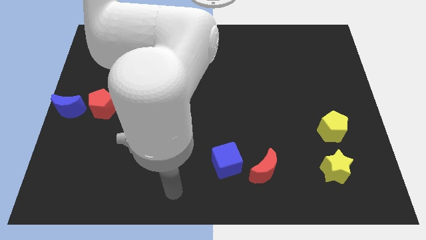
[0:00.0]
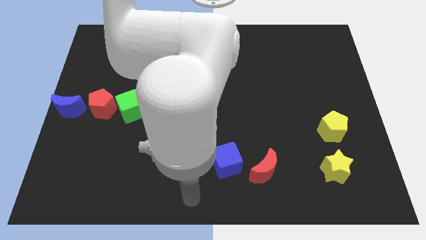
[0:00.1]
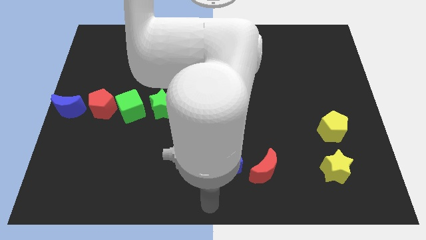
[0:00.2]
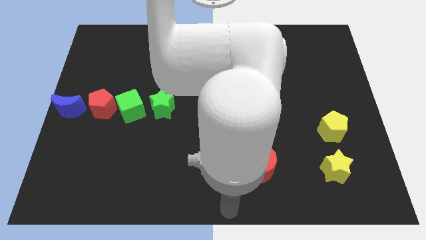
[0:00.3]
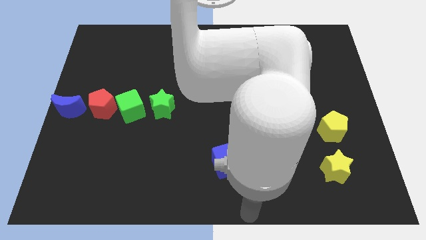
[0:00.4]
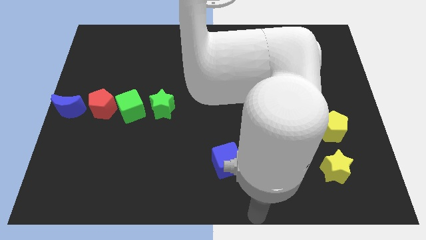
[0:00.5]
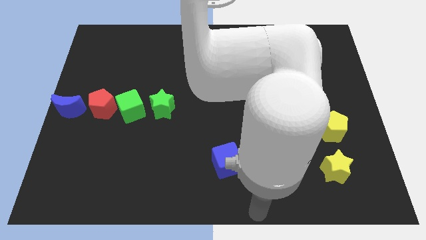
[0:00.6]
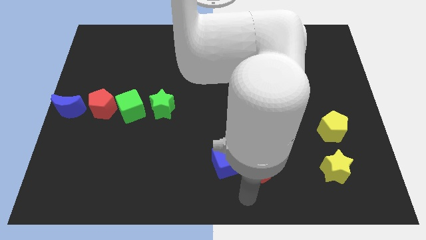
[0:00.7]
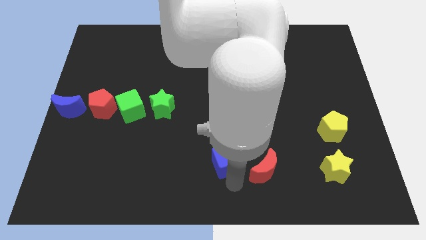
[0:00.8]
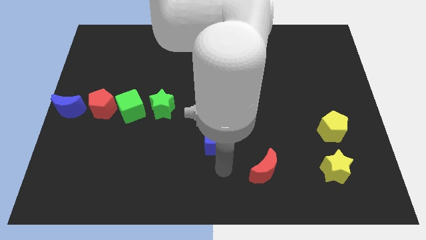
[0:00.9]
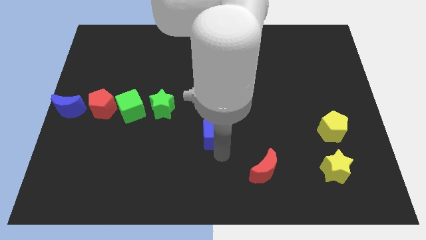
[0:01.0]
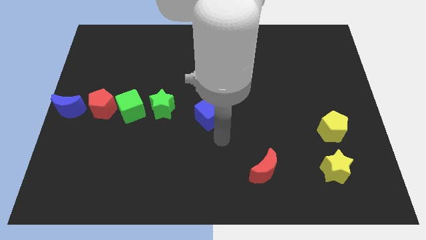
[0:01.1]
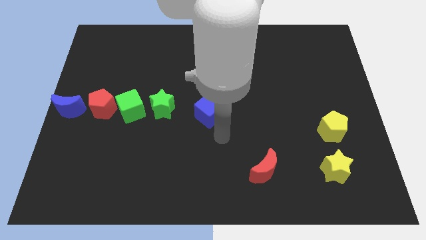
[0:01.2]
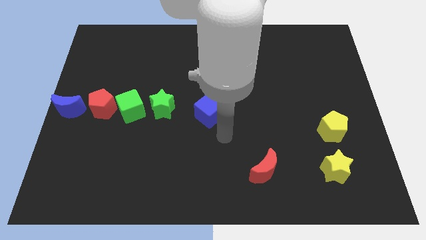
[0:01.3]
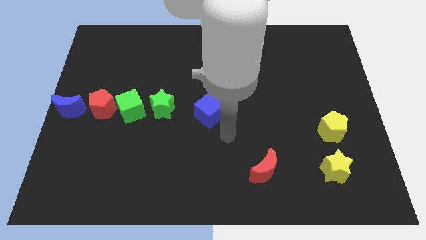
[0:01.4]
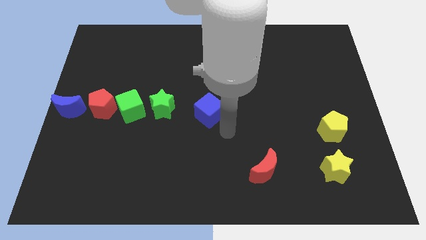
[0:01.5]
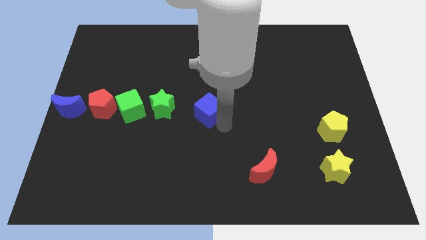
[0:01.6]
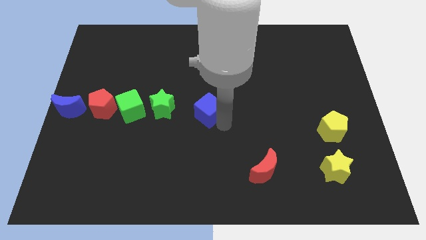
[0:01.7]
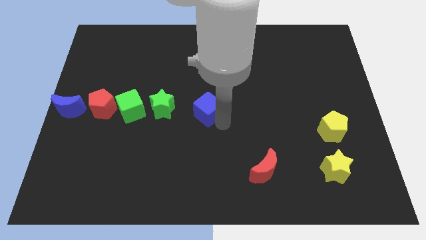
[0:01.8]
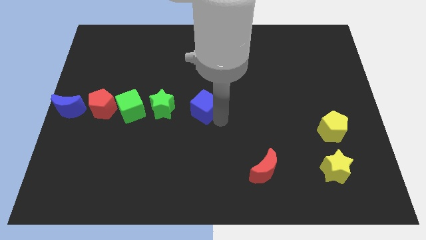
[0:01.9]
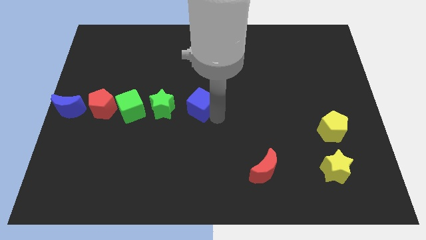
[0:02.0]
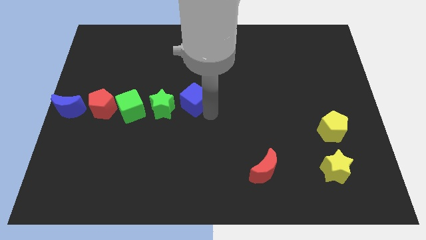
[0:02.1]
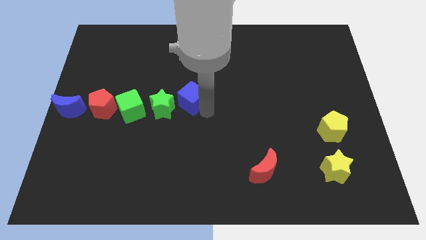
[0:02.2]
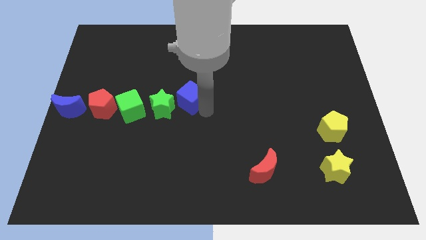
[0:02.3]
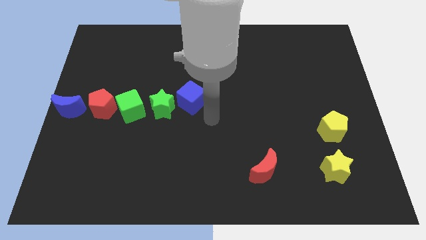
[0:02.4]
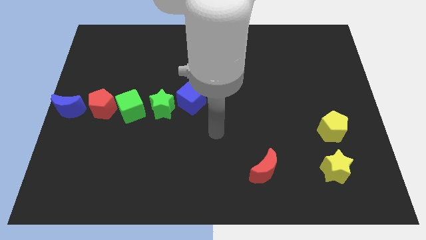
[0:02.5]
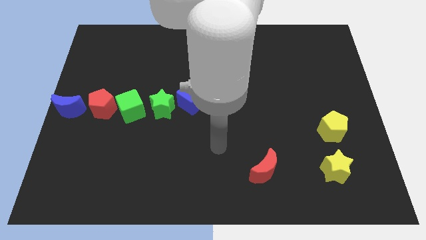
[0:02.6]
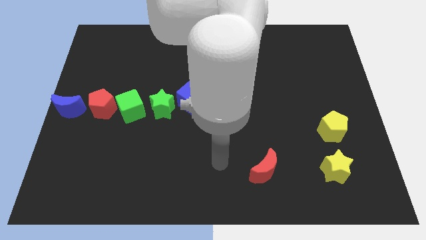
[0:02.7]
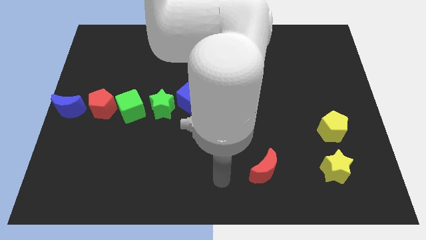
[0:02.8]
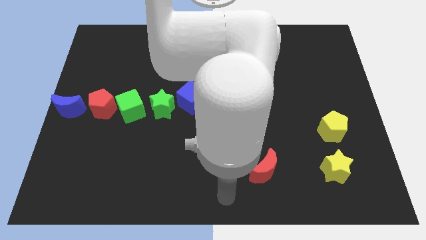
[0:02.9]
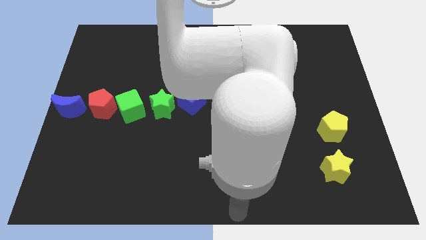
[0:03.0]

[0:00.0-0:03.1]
adjust the blue cube at the right of the green star

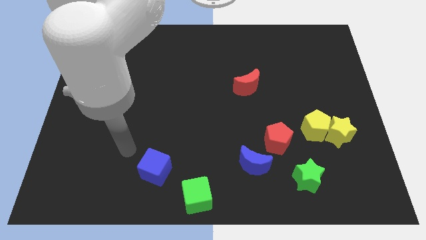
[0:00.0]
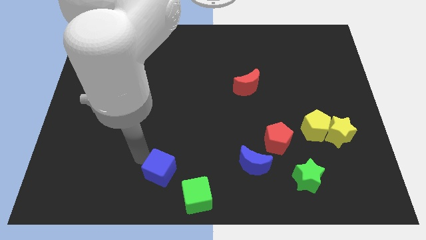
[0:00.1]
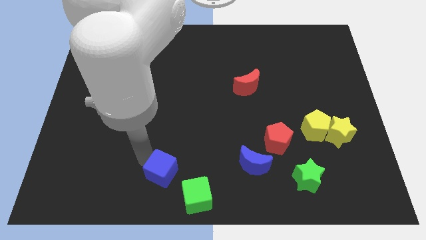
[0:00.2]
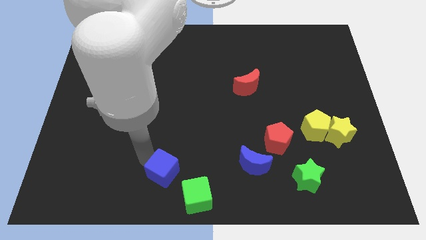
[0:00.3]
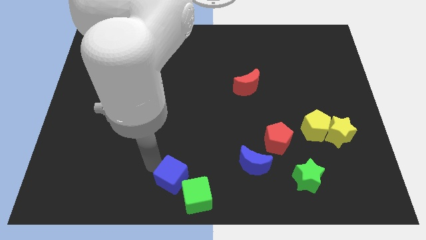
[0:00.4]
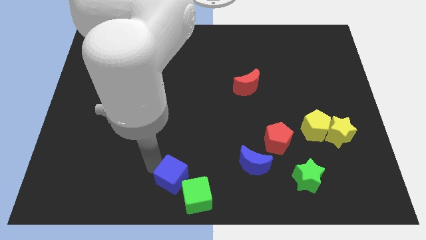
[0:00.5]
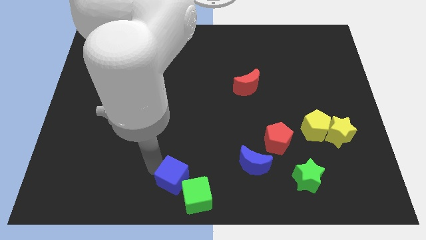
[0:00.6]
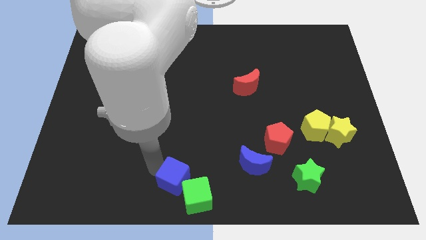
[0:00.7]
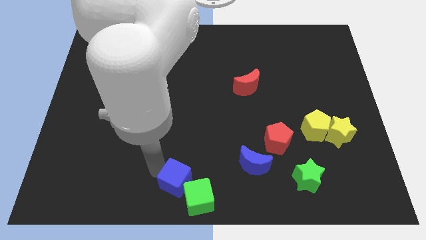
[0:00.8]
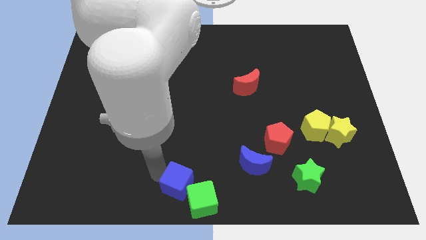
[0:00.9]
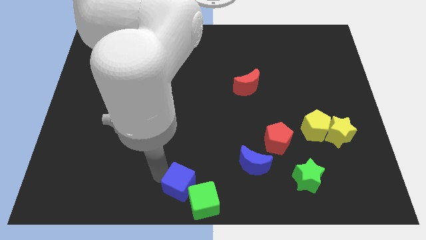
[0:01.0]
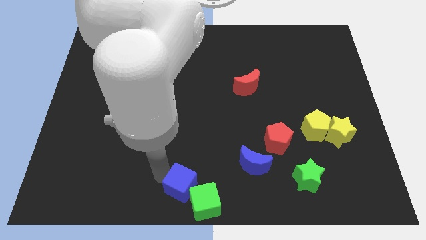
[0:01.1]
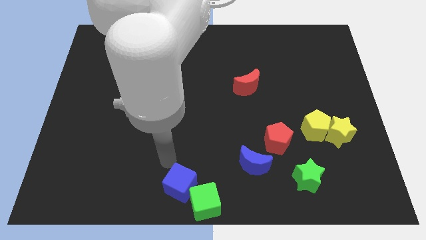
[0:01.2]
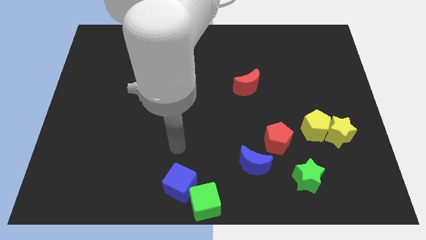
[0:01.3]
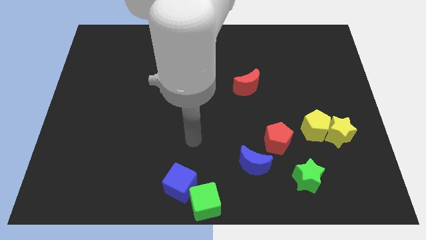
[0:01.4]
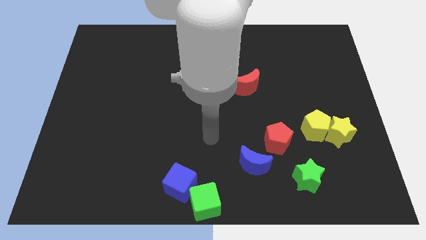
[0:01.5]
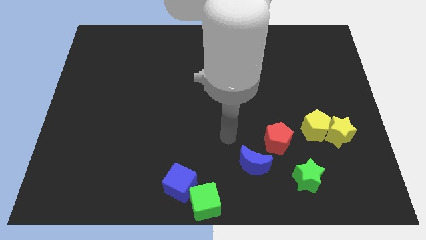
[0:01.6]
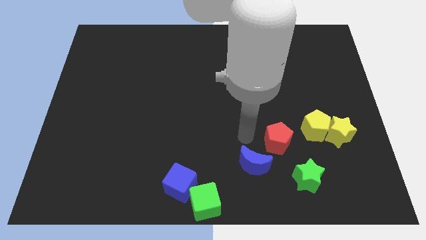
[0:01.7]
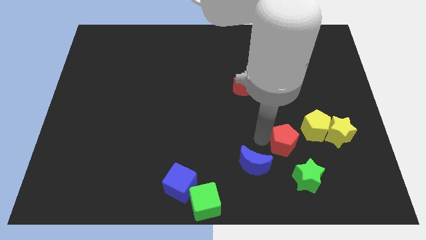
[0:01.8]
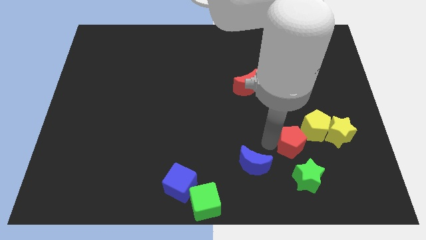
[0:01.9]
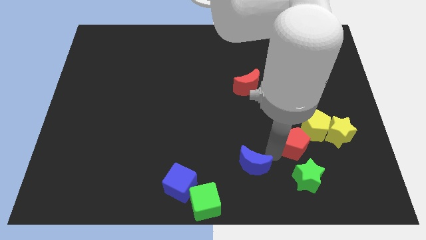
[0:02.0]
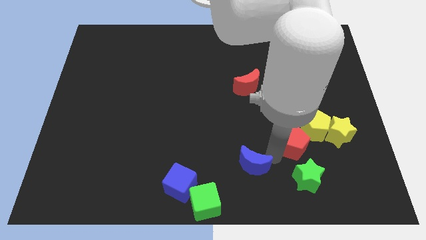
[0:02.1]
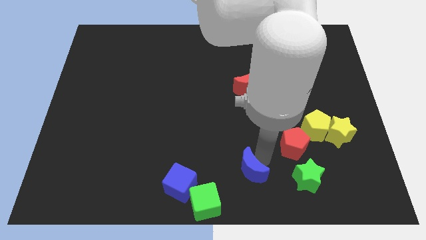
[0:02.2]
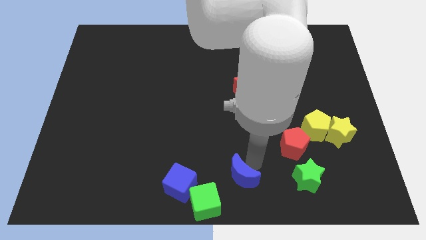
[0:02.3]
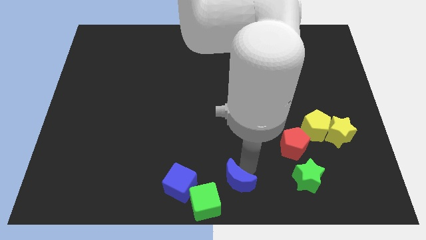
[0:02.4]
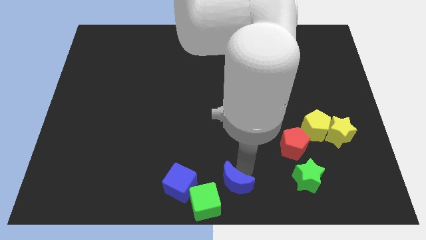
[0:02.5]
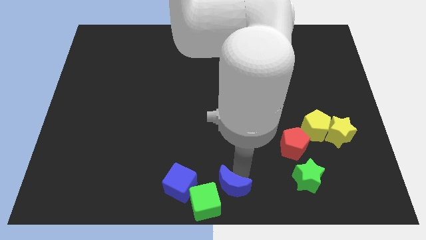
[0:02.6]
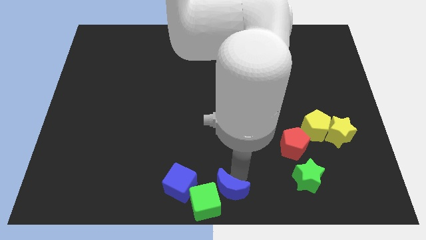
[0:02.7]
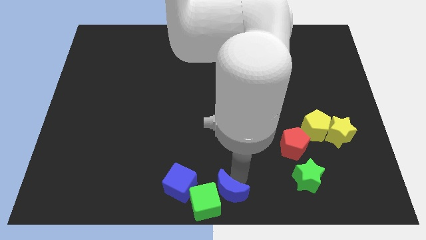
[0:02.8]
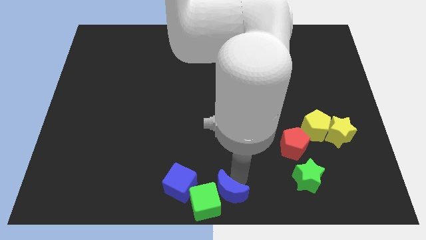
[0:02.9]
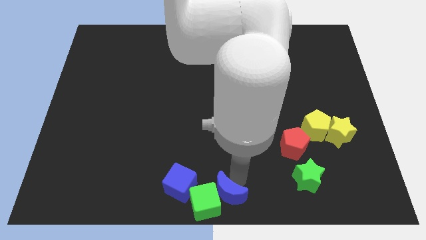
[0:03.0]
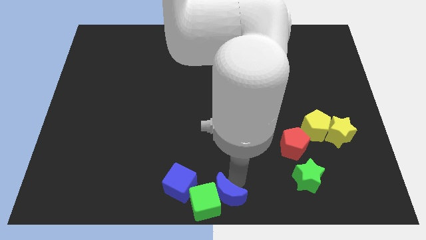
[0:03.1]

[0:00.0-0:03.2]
place blue moon to the right of green cube

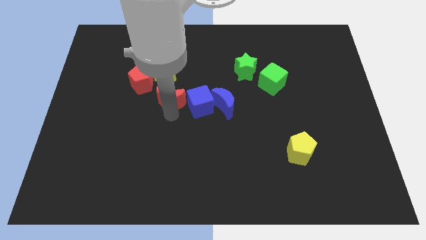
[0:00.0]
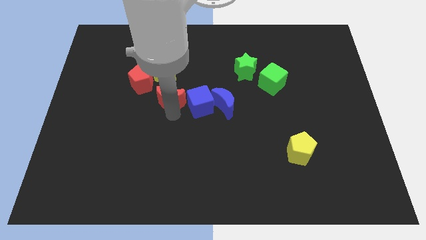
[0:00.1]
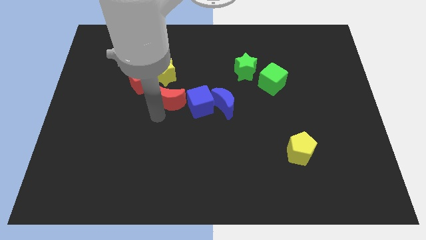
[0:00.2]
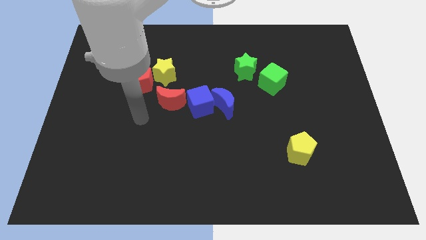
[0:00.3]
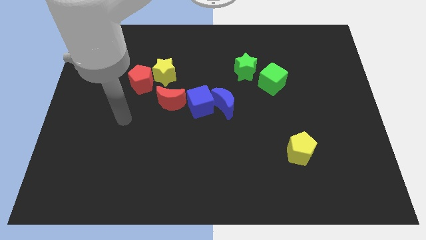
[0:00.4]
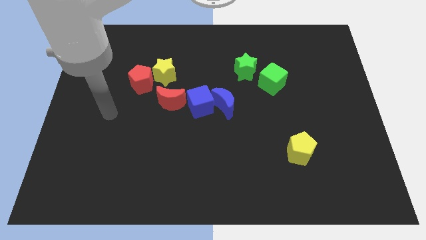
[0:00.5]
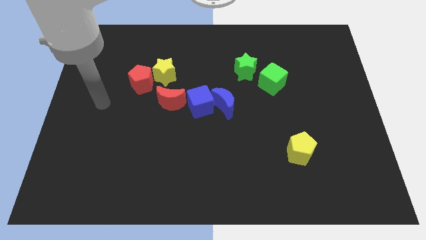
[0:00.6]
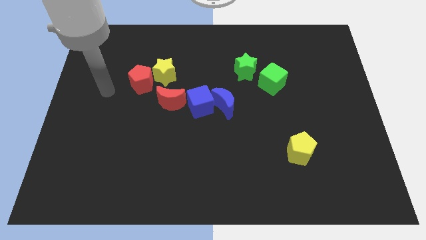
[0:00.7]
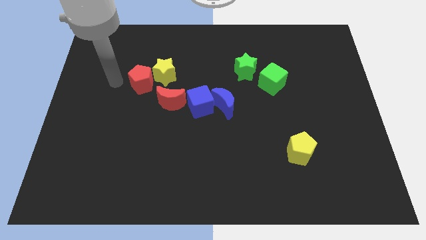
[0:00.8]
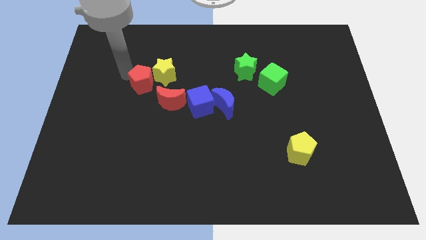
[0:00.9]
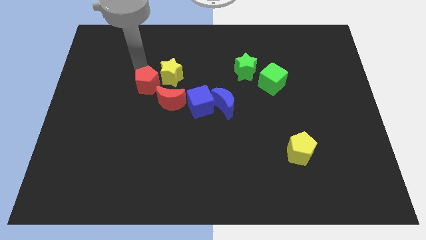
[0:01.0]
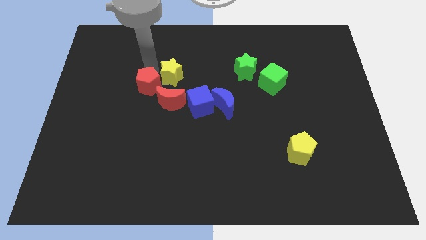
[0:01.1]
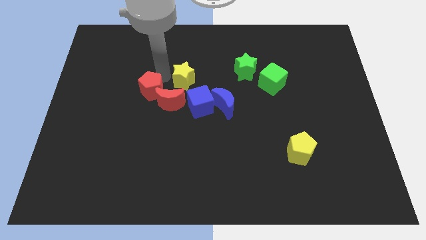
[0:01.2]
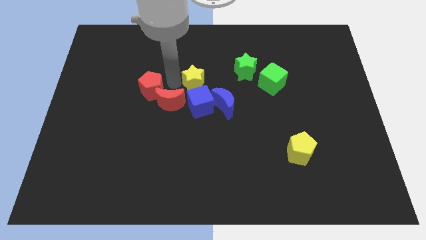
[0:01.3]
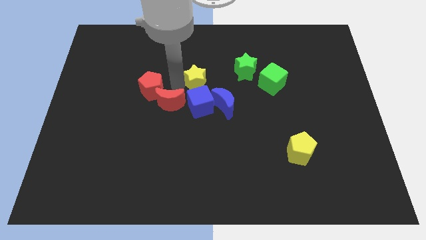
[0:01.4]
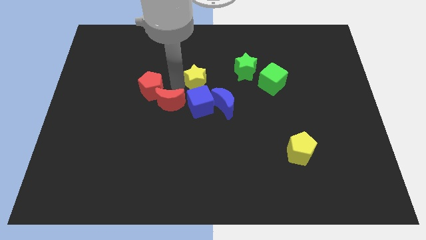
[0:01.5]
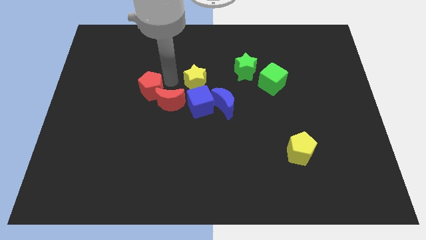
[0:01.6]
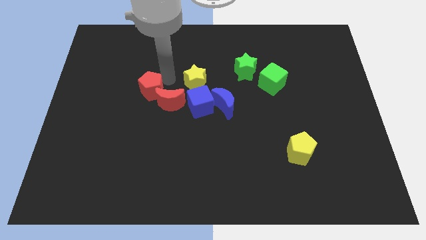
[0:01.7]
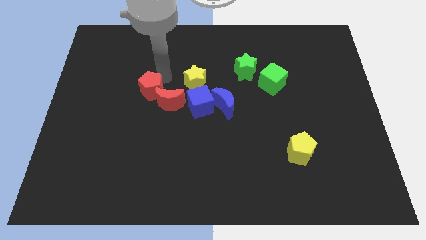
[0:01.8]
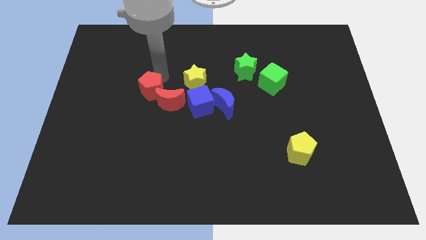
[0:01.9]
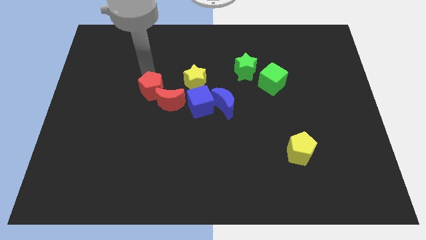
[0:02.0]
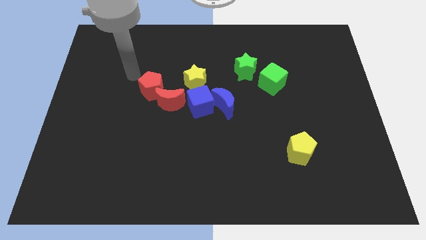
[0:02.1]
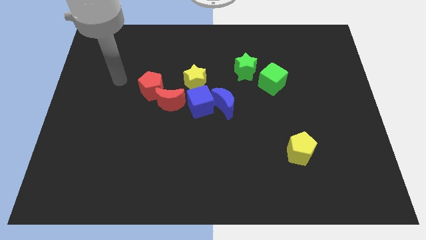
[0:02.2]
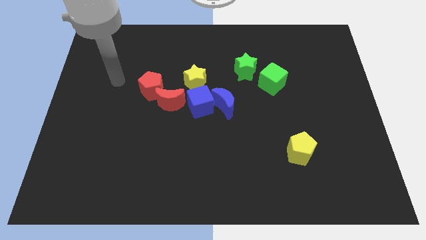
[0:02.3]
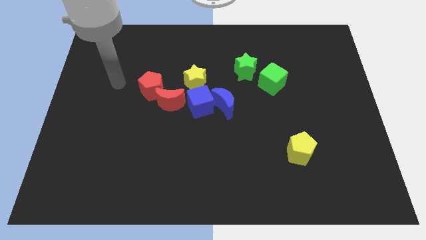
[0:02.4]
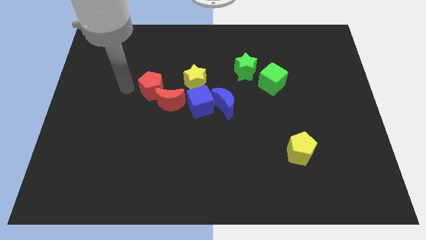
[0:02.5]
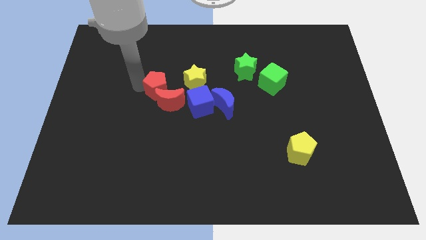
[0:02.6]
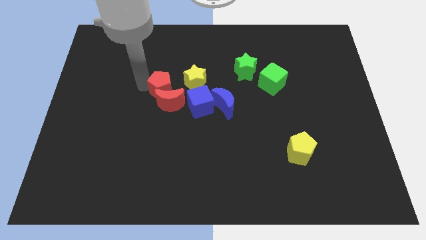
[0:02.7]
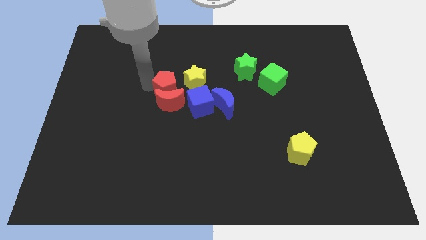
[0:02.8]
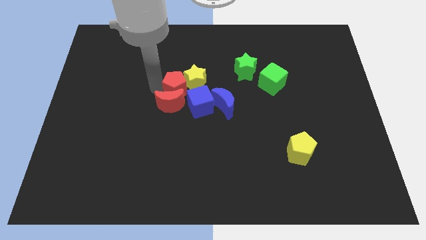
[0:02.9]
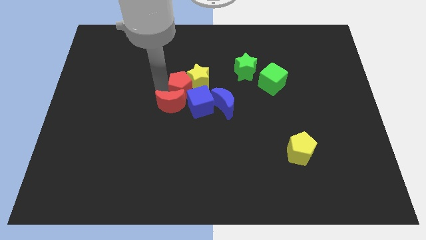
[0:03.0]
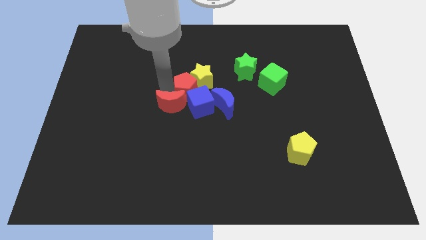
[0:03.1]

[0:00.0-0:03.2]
place the red pentagon and yellow star on the top of blue cube
